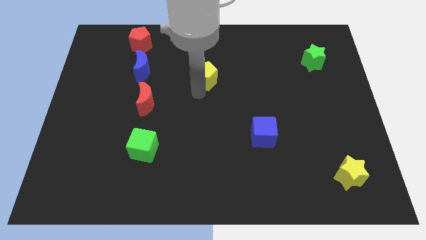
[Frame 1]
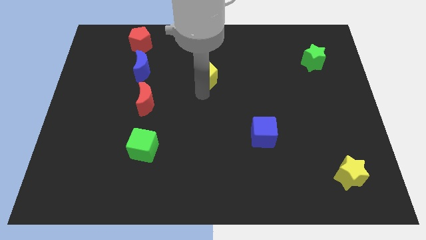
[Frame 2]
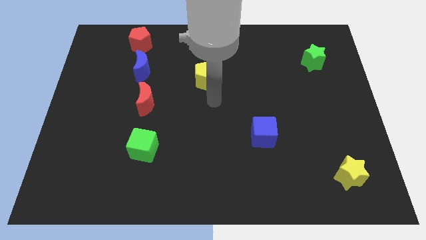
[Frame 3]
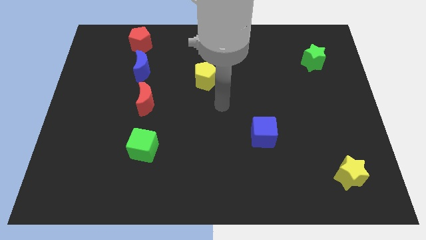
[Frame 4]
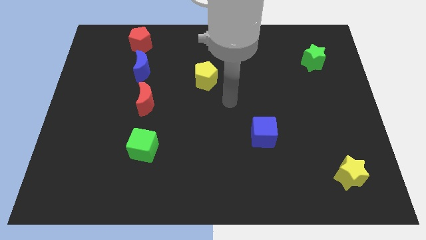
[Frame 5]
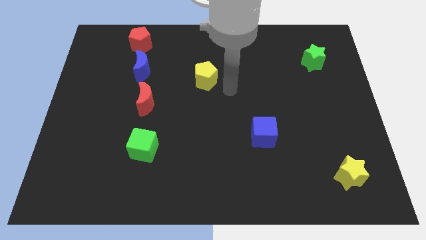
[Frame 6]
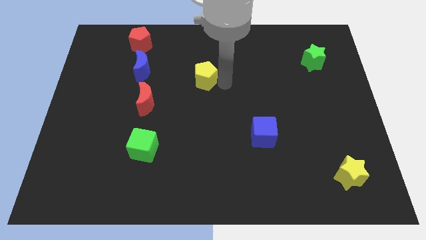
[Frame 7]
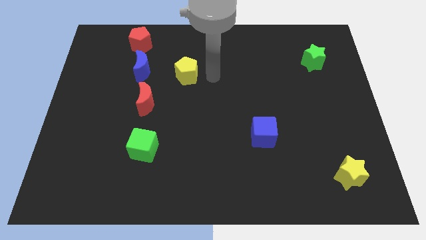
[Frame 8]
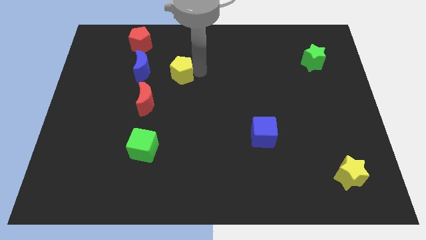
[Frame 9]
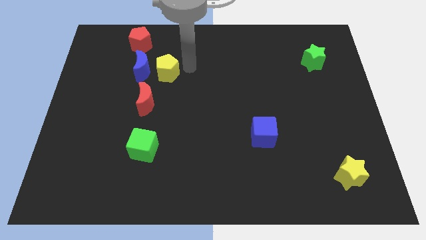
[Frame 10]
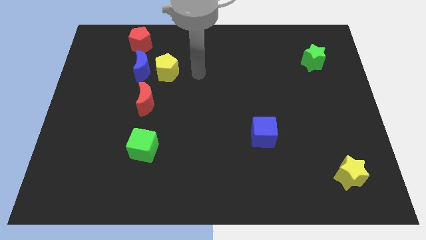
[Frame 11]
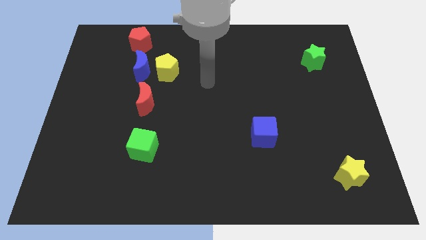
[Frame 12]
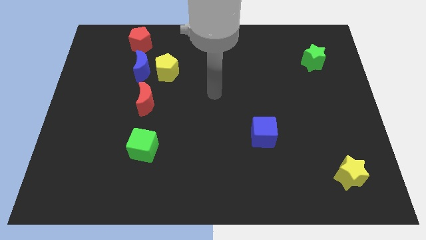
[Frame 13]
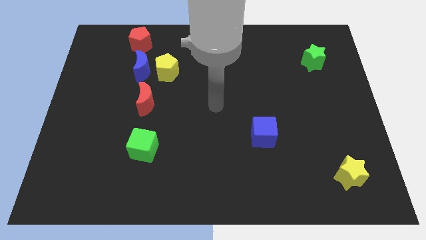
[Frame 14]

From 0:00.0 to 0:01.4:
place the yellow pentagon right to the blue moon

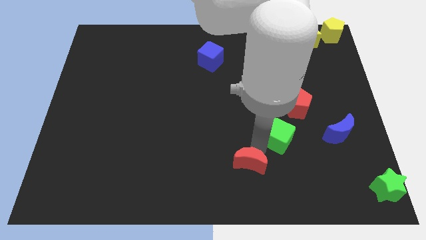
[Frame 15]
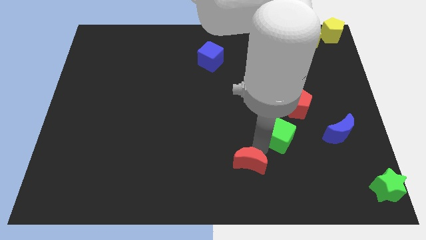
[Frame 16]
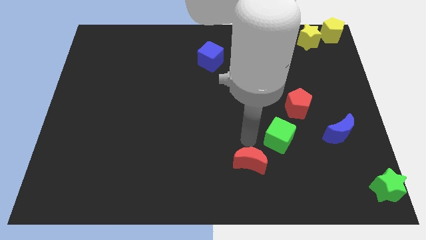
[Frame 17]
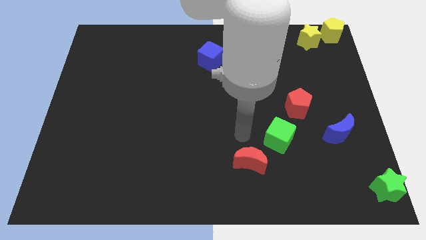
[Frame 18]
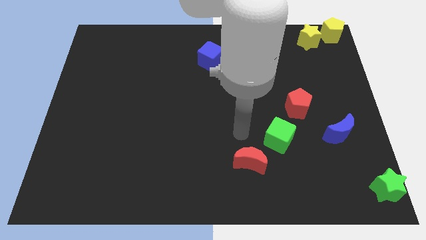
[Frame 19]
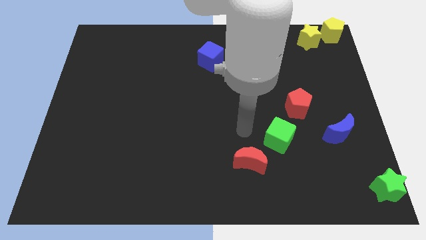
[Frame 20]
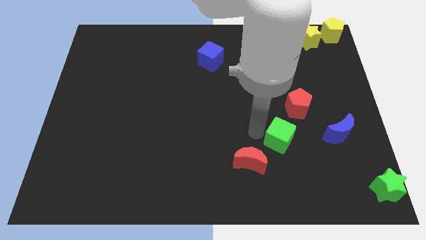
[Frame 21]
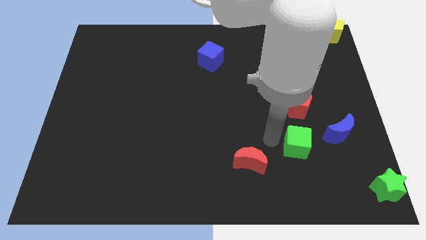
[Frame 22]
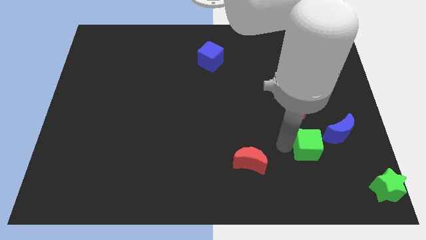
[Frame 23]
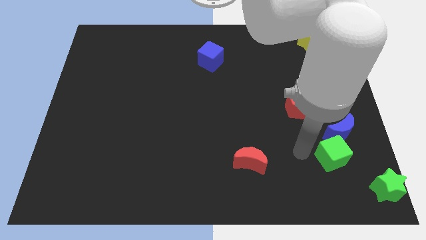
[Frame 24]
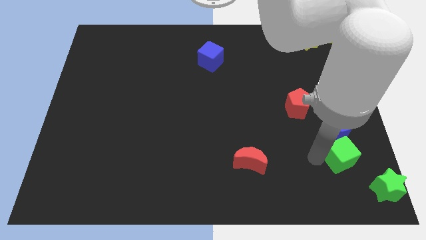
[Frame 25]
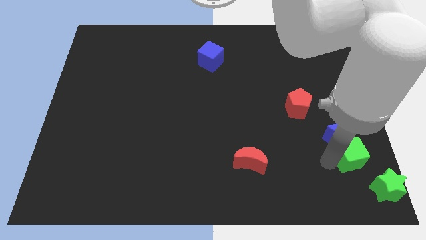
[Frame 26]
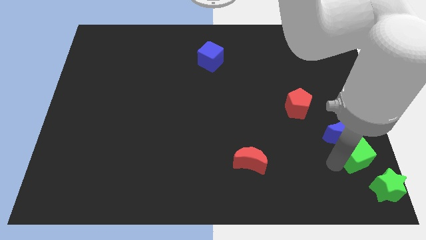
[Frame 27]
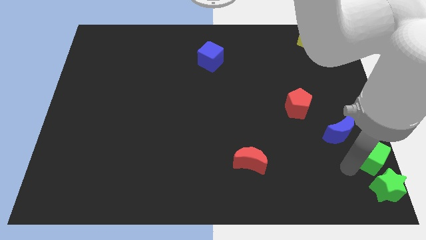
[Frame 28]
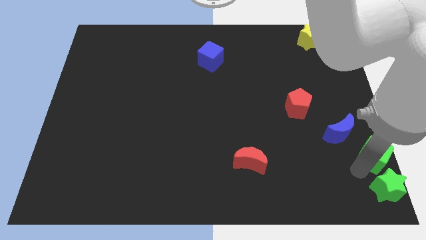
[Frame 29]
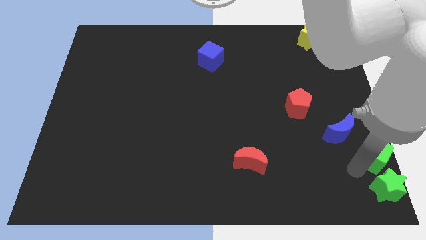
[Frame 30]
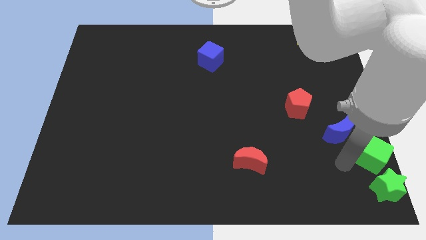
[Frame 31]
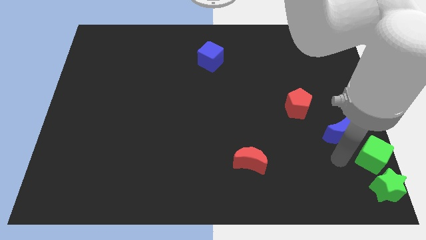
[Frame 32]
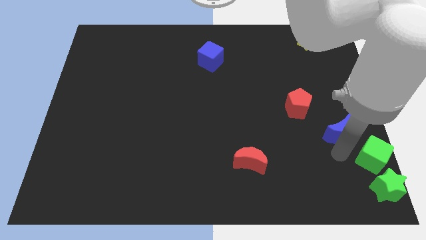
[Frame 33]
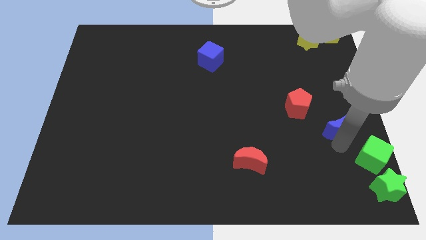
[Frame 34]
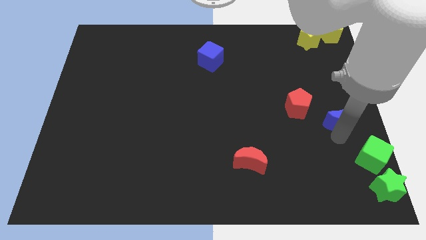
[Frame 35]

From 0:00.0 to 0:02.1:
move the green cube towards the top of the green star

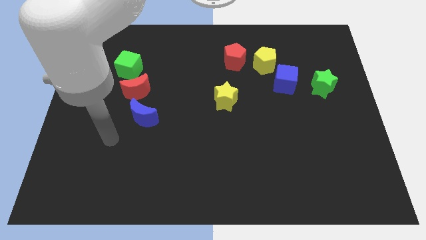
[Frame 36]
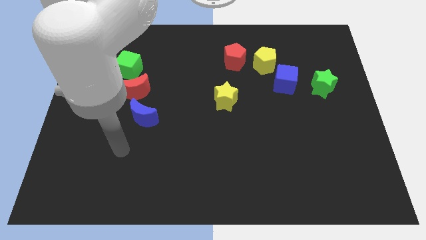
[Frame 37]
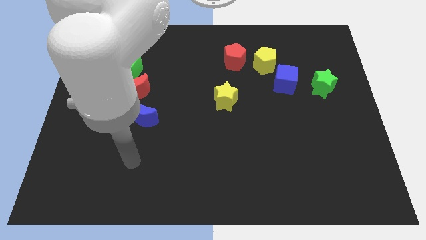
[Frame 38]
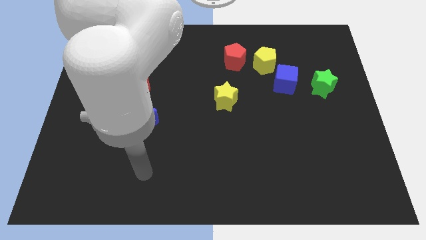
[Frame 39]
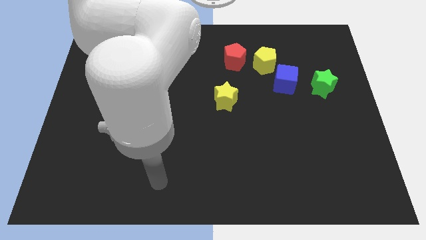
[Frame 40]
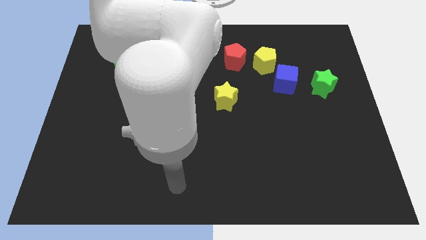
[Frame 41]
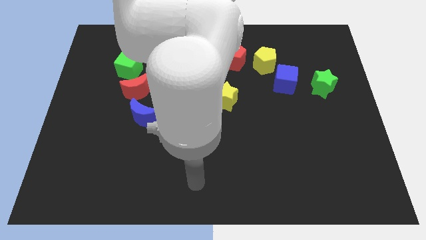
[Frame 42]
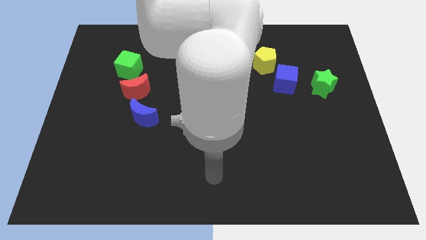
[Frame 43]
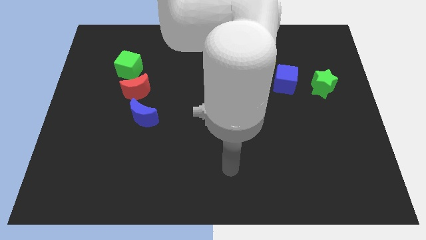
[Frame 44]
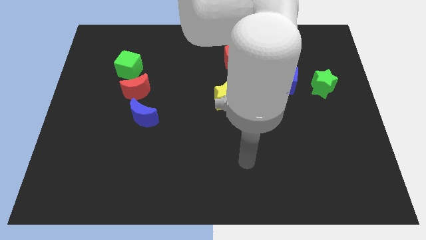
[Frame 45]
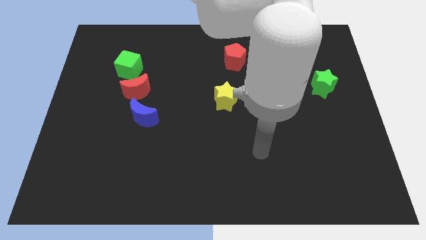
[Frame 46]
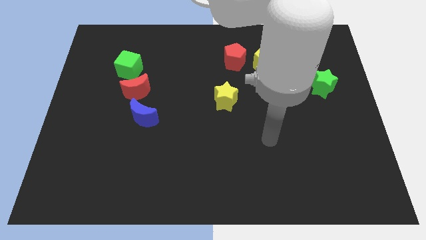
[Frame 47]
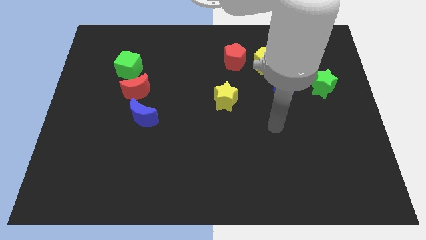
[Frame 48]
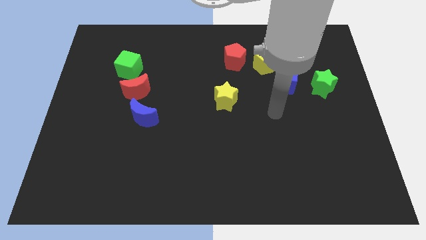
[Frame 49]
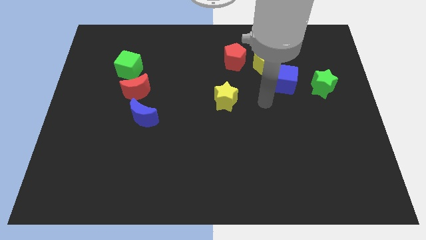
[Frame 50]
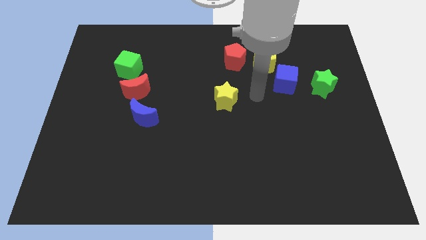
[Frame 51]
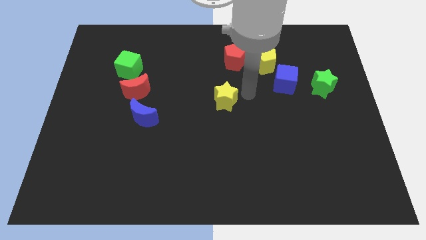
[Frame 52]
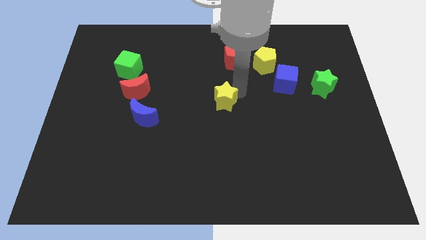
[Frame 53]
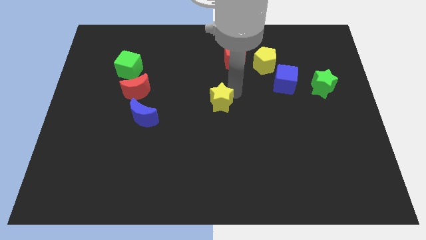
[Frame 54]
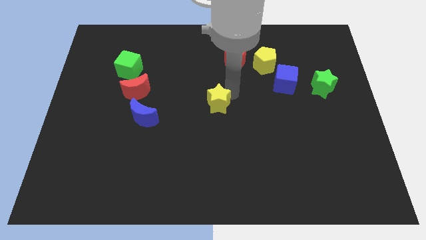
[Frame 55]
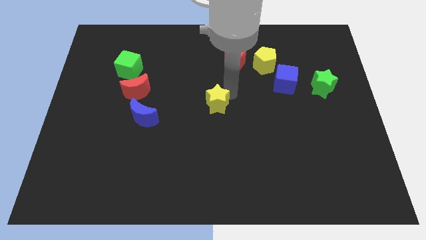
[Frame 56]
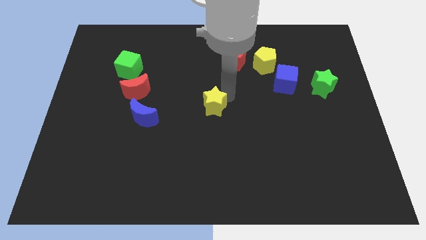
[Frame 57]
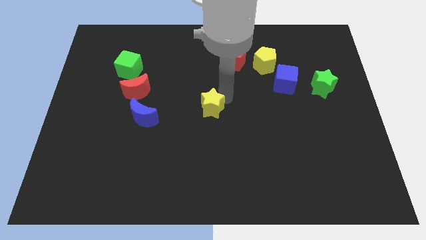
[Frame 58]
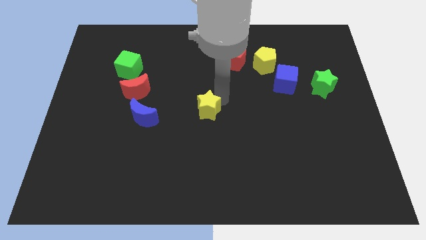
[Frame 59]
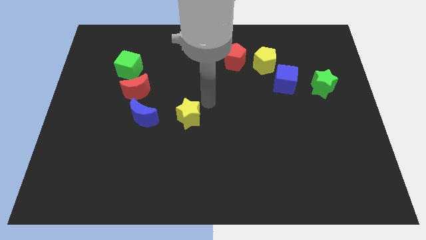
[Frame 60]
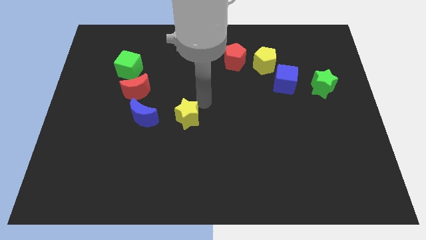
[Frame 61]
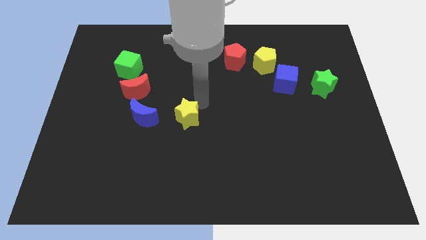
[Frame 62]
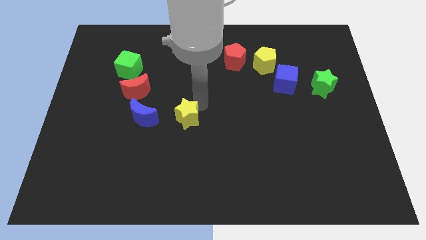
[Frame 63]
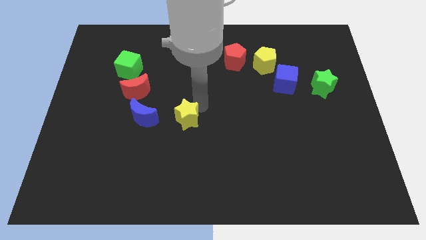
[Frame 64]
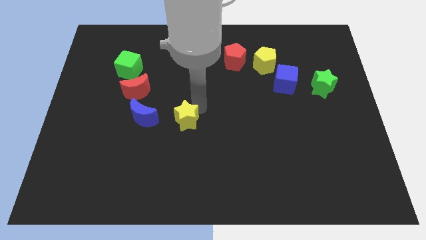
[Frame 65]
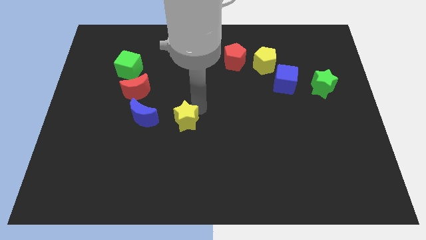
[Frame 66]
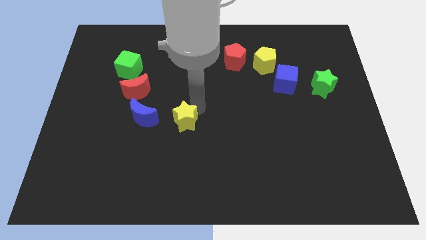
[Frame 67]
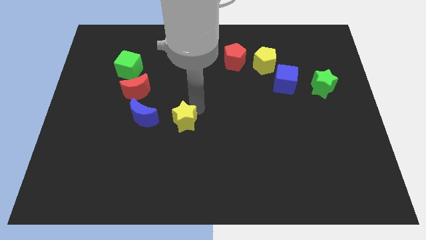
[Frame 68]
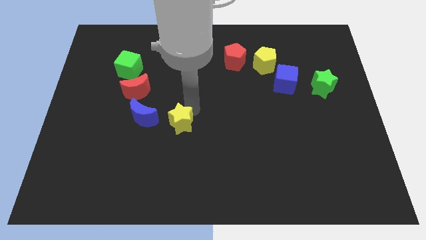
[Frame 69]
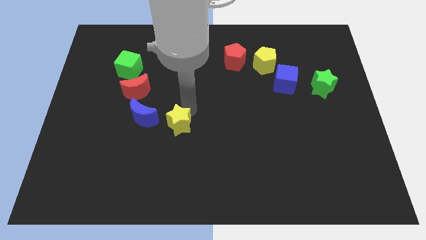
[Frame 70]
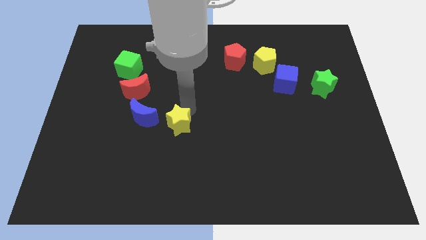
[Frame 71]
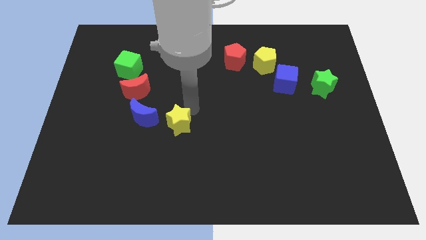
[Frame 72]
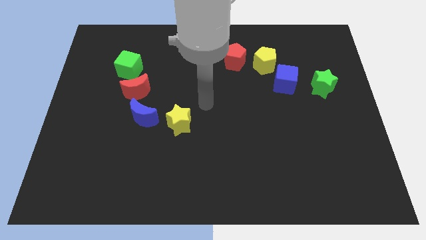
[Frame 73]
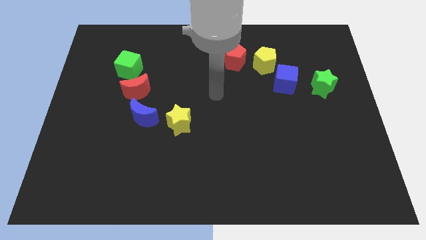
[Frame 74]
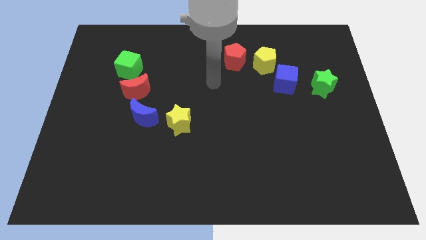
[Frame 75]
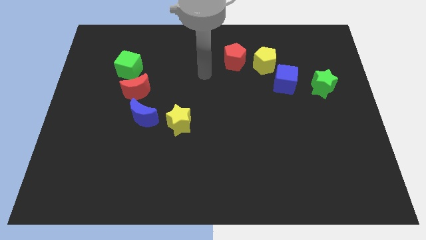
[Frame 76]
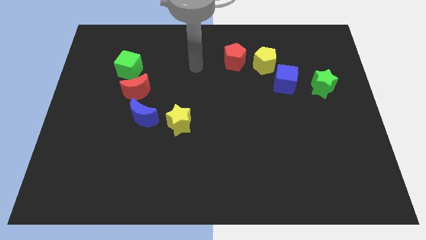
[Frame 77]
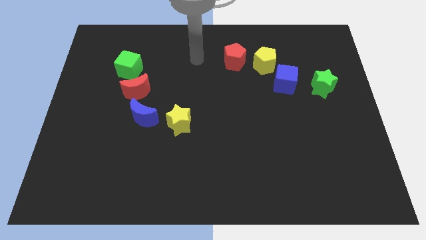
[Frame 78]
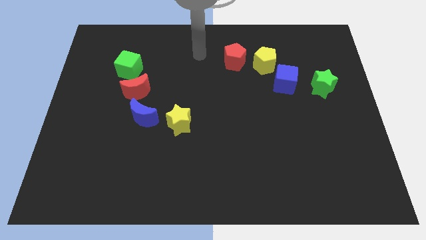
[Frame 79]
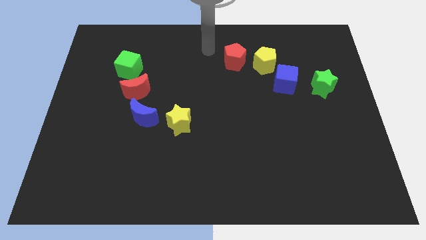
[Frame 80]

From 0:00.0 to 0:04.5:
move the yellow star close to the blue moon

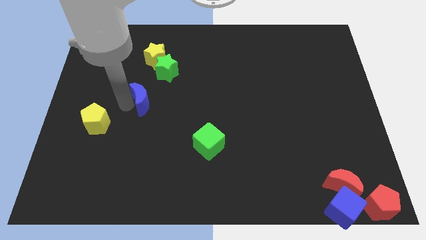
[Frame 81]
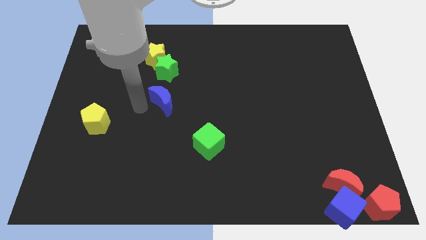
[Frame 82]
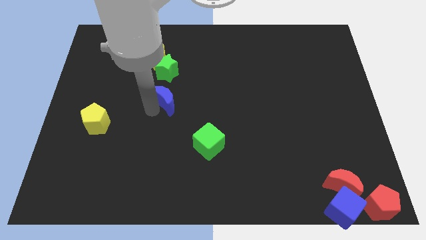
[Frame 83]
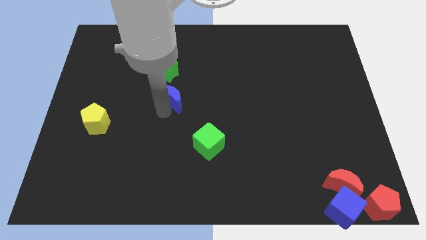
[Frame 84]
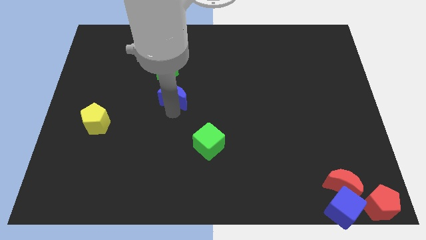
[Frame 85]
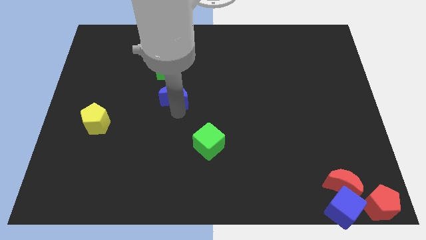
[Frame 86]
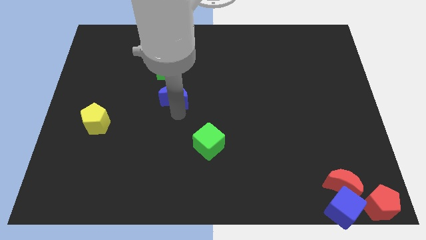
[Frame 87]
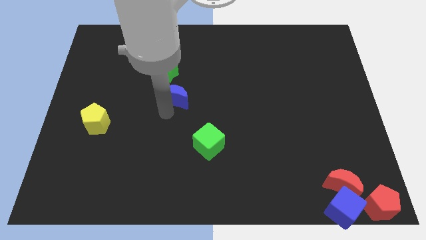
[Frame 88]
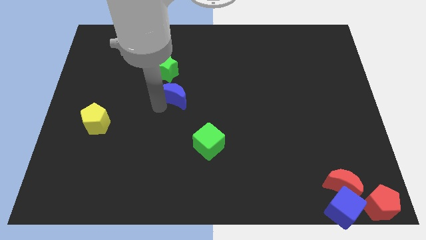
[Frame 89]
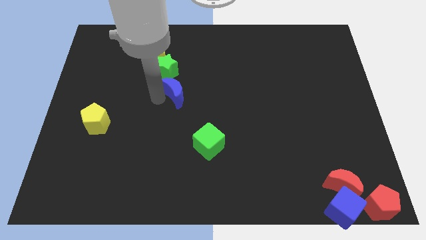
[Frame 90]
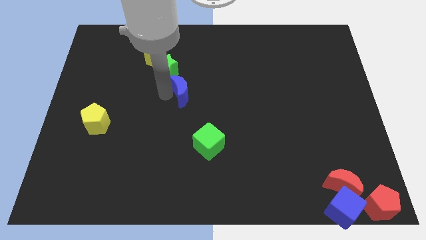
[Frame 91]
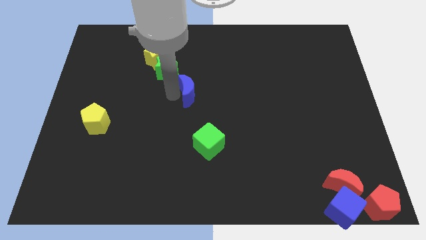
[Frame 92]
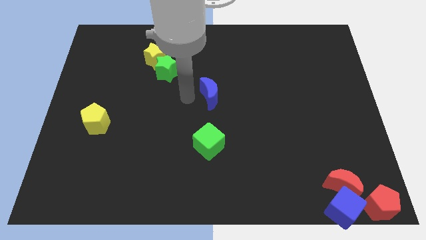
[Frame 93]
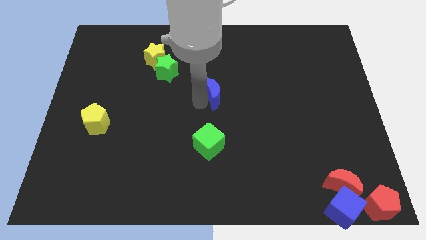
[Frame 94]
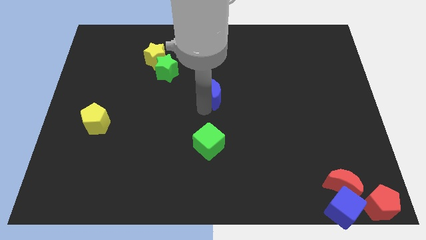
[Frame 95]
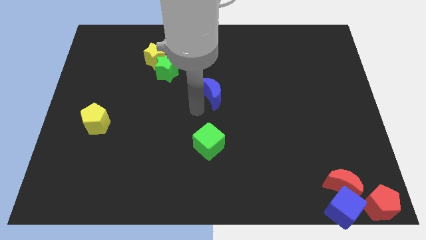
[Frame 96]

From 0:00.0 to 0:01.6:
place the blue moon at the center of the board
